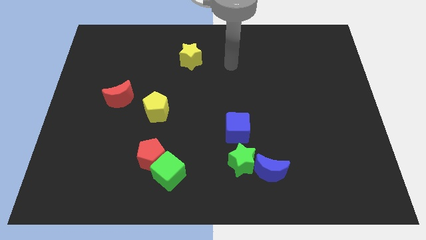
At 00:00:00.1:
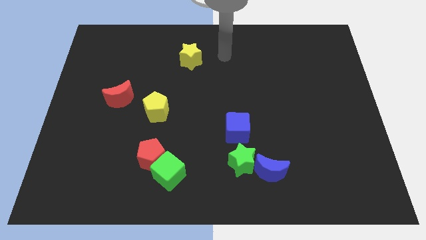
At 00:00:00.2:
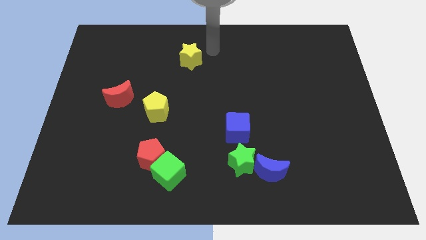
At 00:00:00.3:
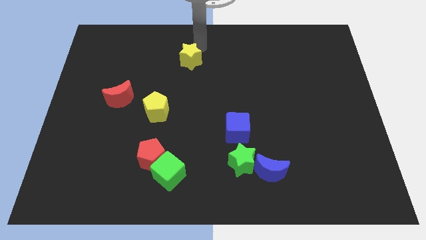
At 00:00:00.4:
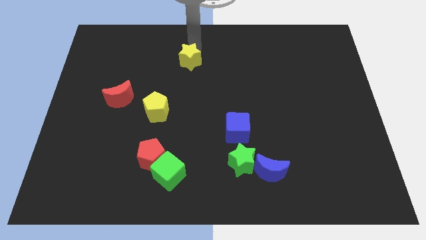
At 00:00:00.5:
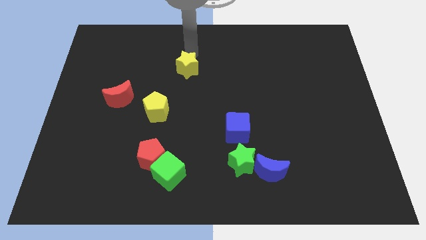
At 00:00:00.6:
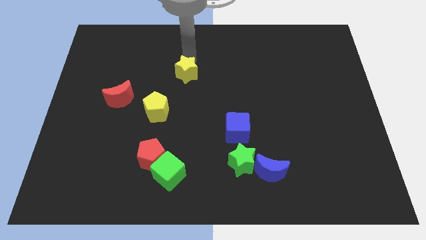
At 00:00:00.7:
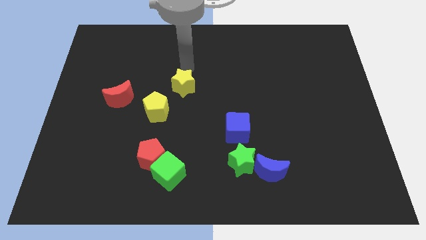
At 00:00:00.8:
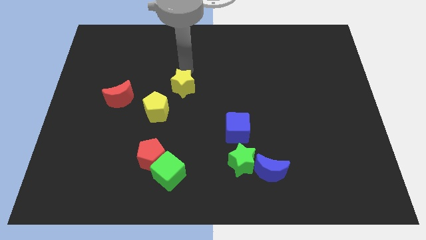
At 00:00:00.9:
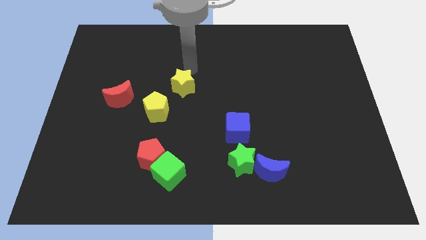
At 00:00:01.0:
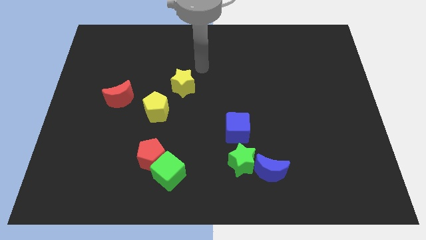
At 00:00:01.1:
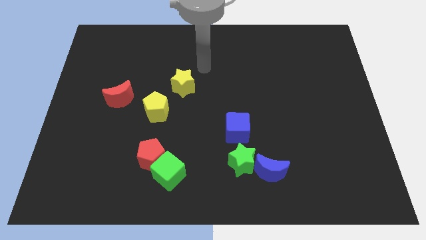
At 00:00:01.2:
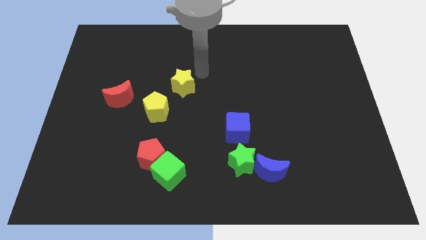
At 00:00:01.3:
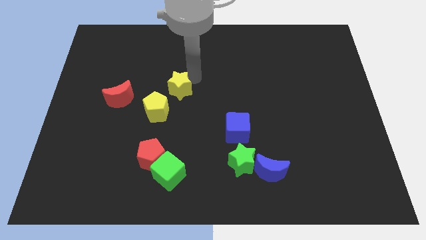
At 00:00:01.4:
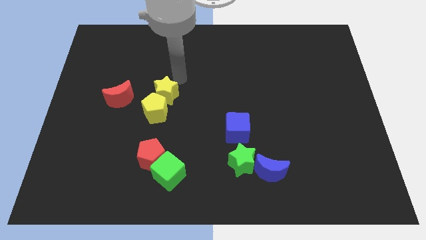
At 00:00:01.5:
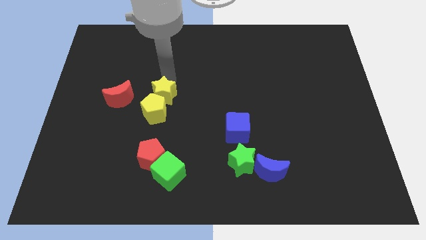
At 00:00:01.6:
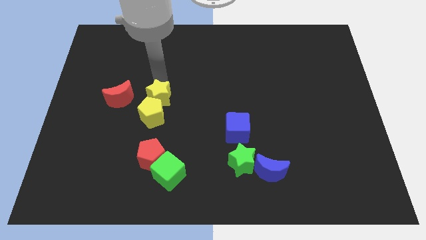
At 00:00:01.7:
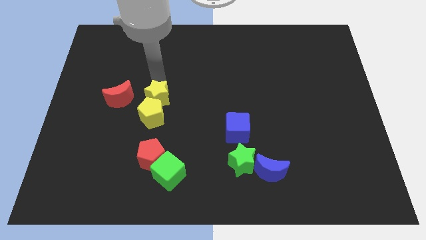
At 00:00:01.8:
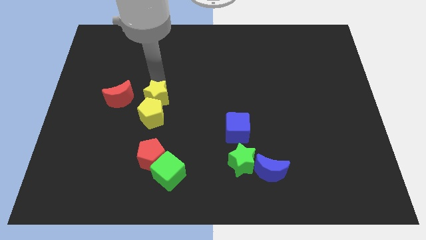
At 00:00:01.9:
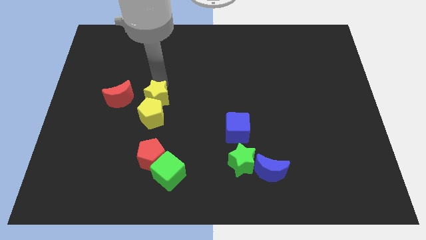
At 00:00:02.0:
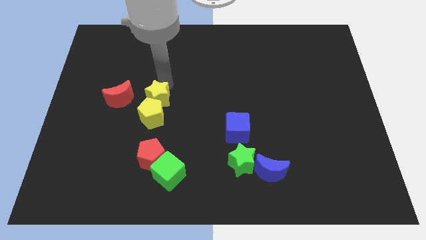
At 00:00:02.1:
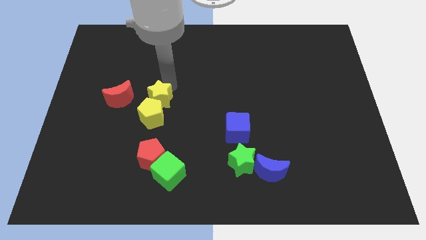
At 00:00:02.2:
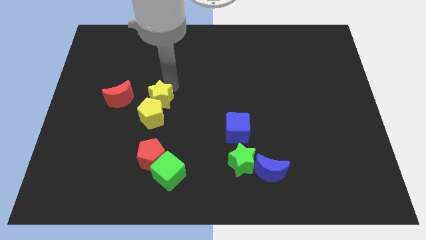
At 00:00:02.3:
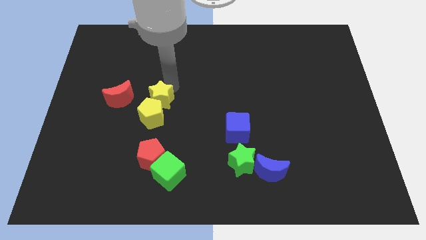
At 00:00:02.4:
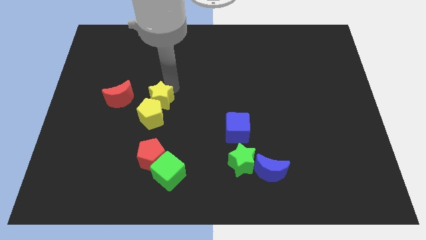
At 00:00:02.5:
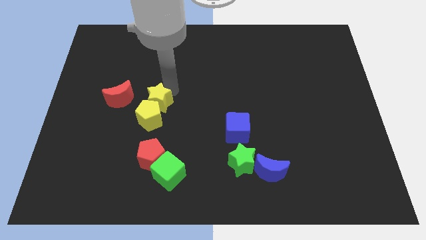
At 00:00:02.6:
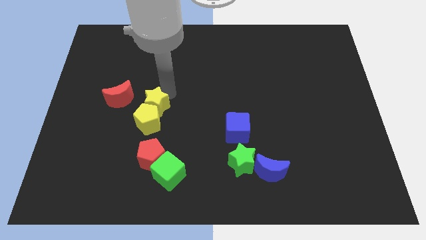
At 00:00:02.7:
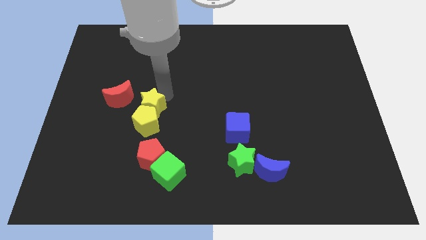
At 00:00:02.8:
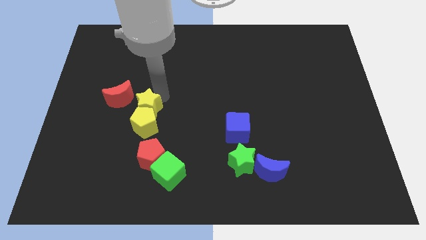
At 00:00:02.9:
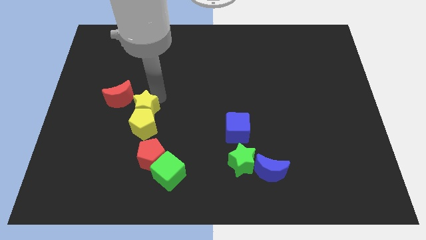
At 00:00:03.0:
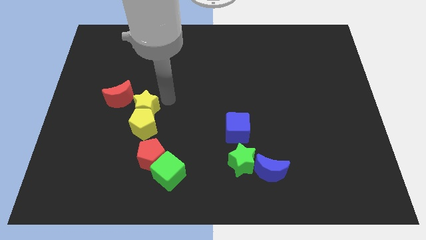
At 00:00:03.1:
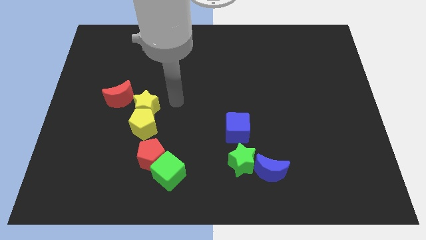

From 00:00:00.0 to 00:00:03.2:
push yellow star on top of yellow pentagon

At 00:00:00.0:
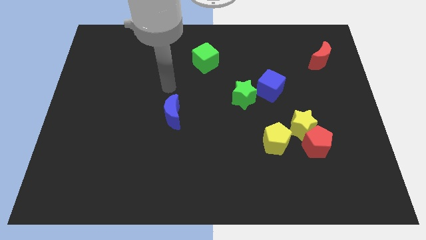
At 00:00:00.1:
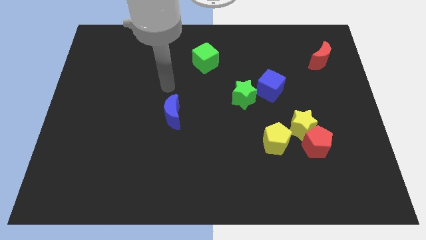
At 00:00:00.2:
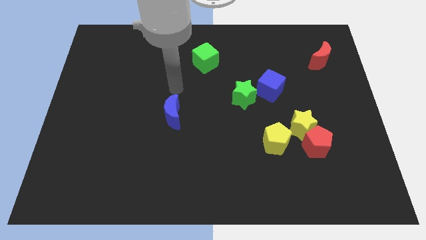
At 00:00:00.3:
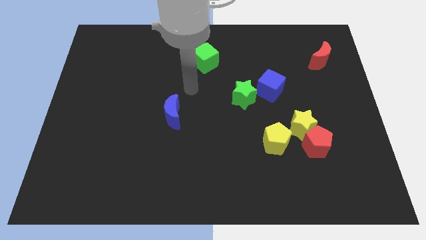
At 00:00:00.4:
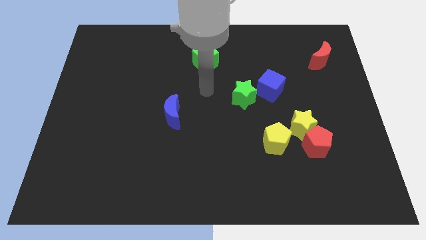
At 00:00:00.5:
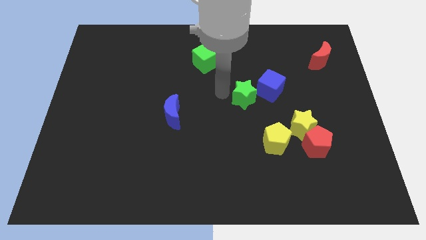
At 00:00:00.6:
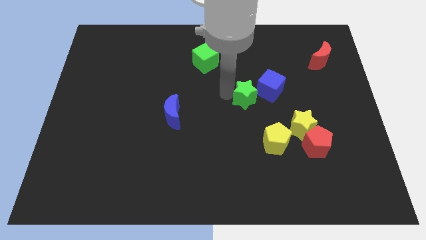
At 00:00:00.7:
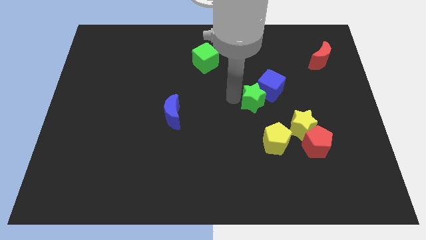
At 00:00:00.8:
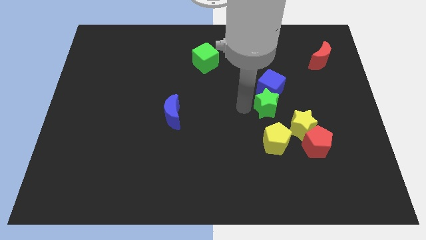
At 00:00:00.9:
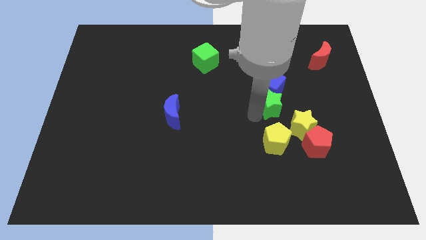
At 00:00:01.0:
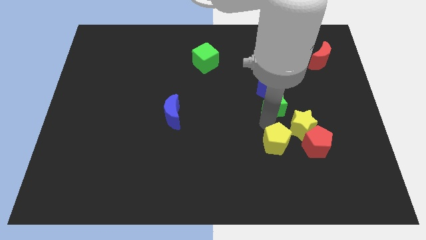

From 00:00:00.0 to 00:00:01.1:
place the green star in between the yellow pentagon and blue cube

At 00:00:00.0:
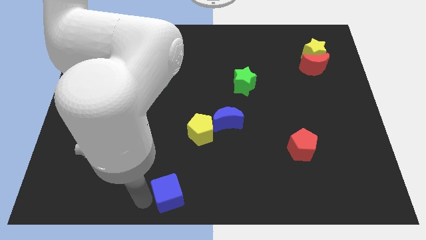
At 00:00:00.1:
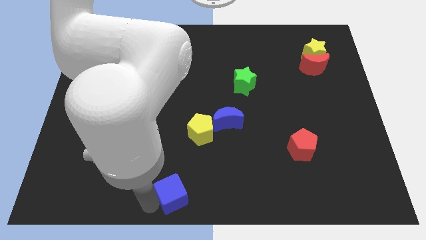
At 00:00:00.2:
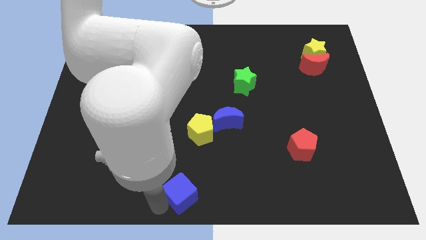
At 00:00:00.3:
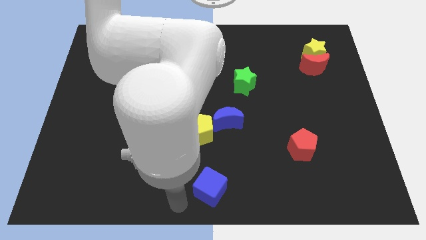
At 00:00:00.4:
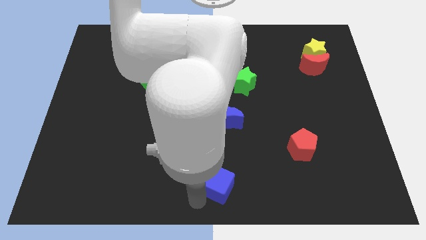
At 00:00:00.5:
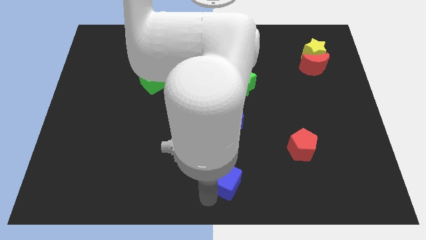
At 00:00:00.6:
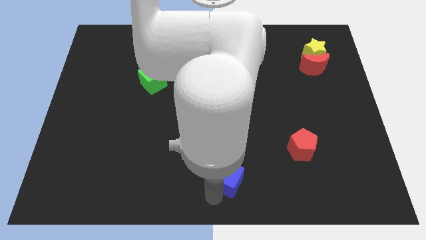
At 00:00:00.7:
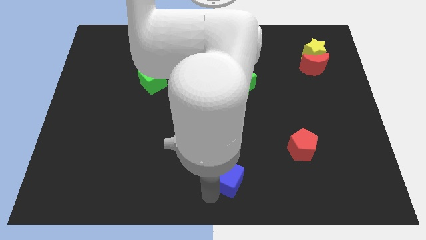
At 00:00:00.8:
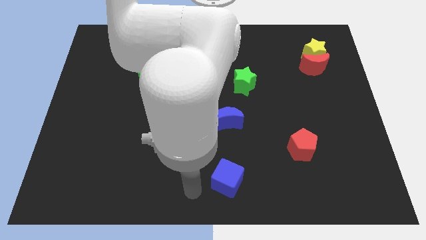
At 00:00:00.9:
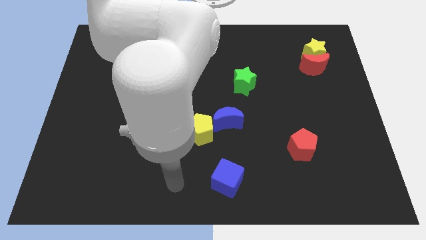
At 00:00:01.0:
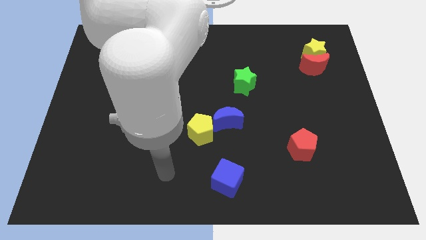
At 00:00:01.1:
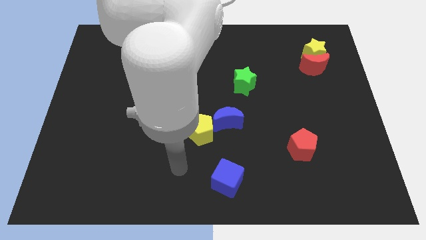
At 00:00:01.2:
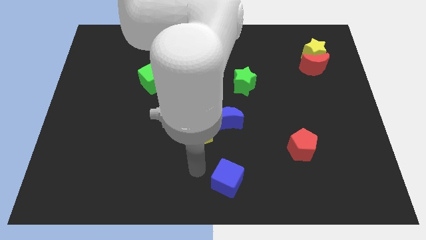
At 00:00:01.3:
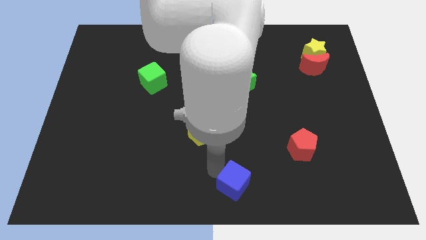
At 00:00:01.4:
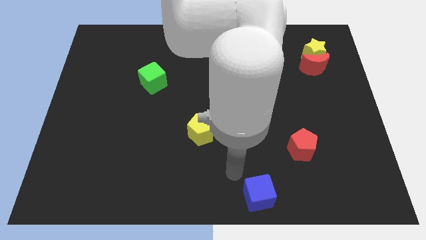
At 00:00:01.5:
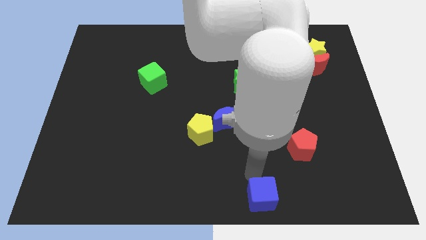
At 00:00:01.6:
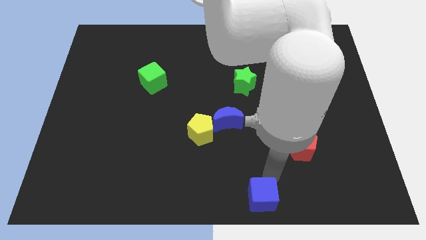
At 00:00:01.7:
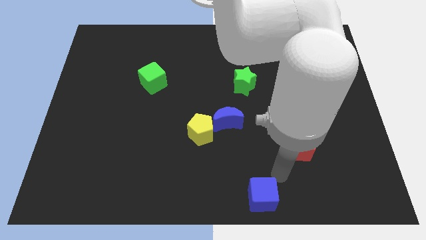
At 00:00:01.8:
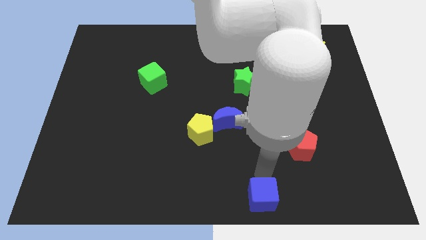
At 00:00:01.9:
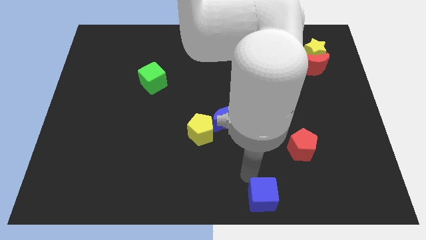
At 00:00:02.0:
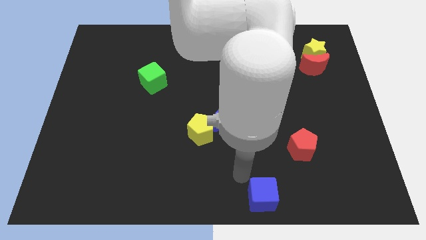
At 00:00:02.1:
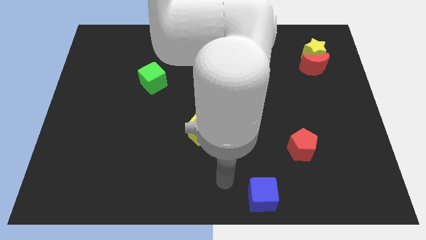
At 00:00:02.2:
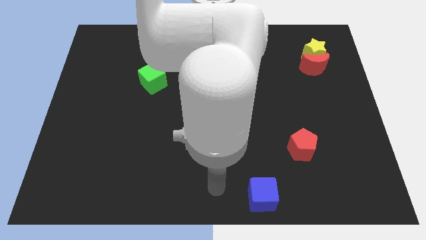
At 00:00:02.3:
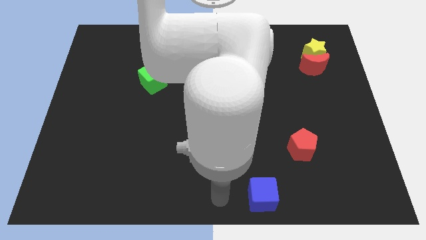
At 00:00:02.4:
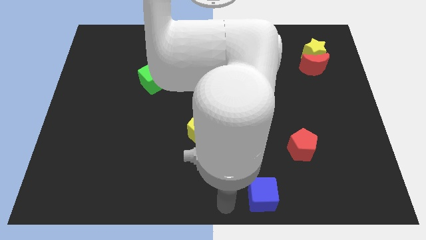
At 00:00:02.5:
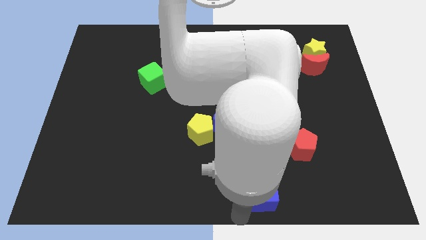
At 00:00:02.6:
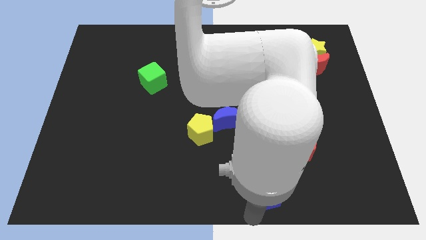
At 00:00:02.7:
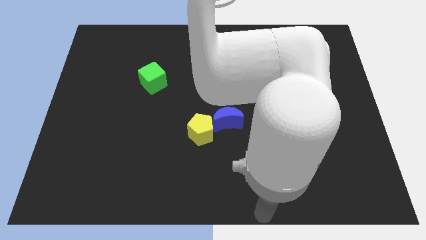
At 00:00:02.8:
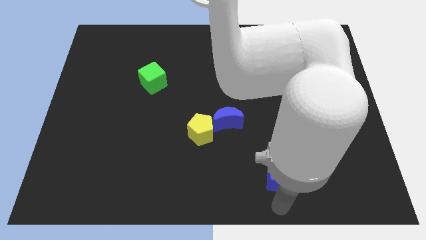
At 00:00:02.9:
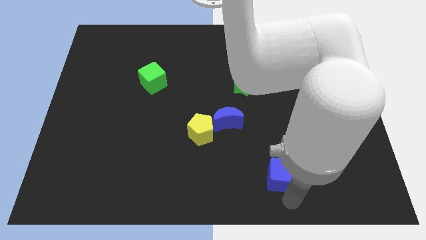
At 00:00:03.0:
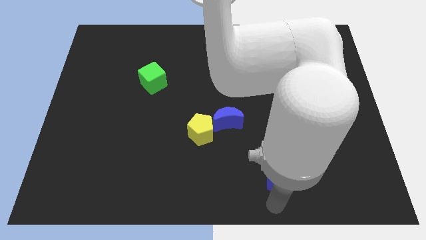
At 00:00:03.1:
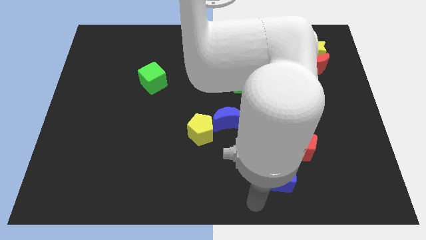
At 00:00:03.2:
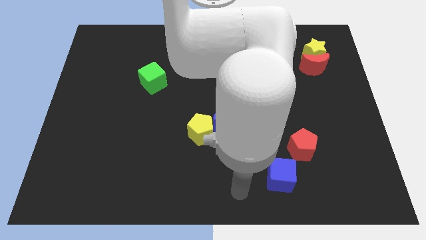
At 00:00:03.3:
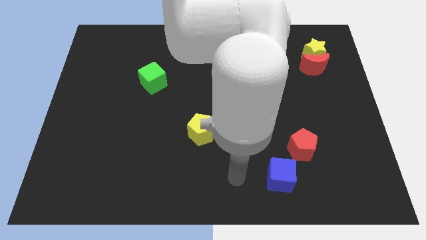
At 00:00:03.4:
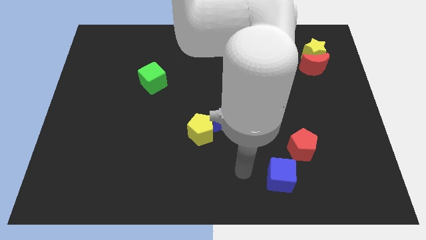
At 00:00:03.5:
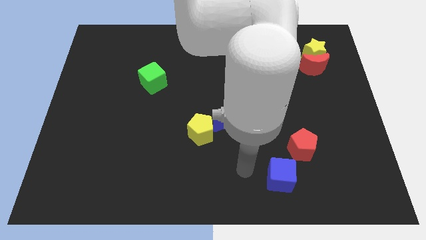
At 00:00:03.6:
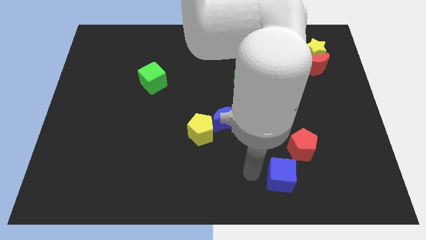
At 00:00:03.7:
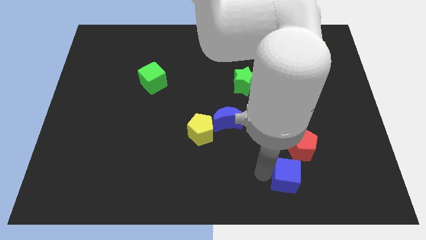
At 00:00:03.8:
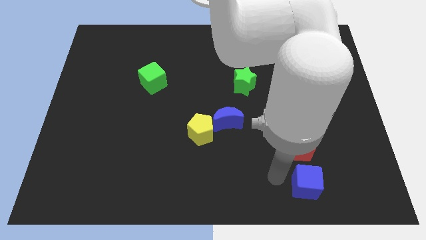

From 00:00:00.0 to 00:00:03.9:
move the blue cube to the bottom of the red pentagon

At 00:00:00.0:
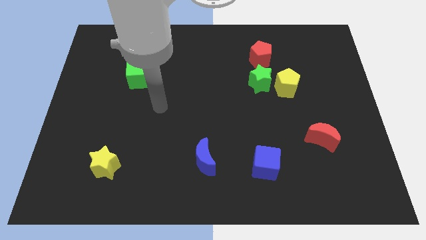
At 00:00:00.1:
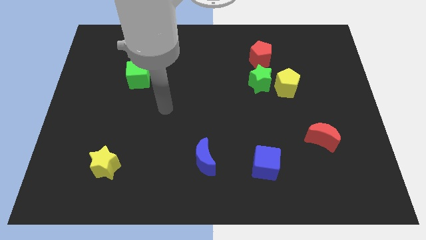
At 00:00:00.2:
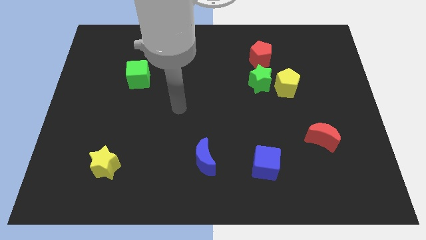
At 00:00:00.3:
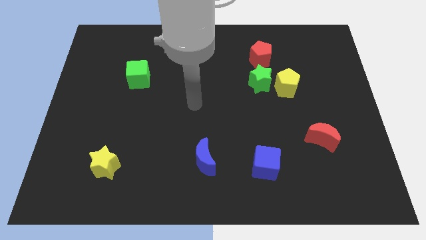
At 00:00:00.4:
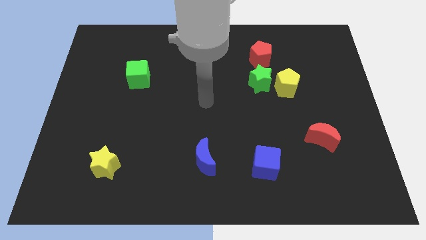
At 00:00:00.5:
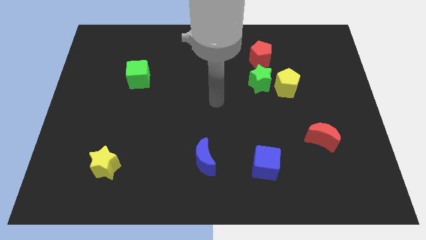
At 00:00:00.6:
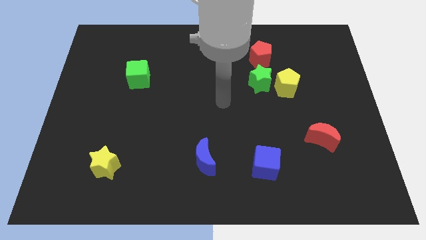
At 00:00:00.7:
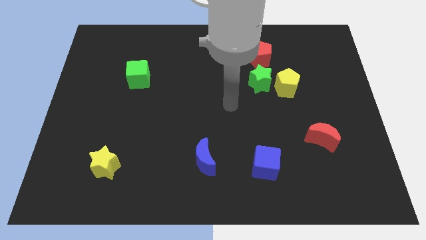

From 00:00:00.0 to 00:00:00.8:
push arm in the center
